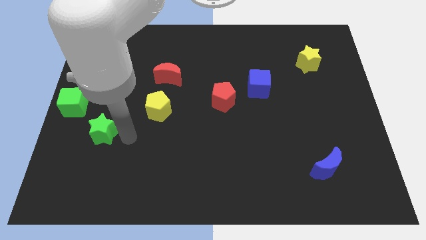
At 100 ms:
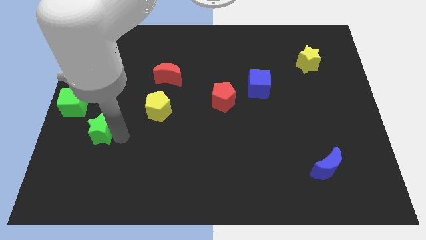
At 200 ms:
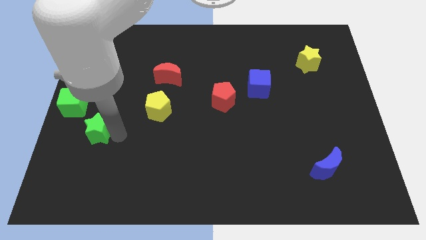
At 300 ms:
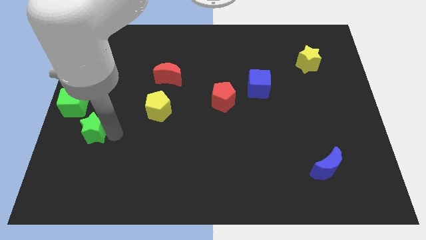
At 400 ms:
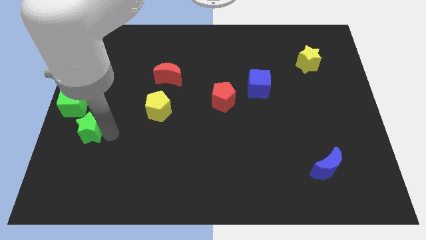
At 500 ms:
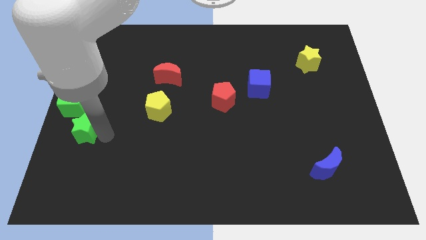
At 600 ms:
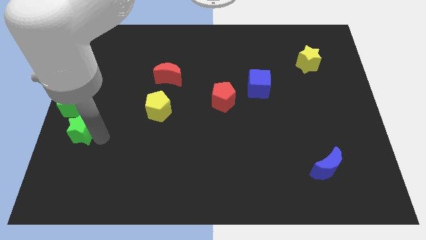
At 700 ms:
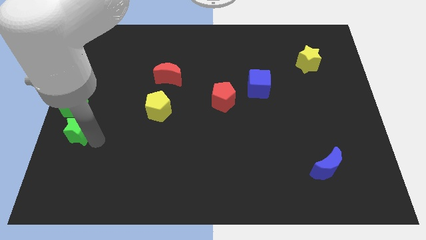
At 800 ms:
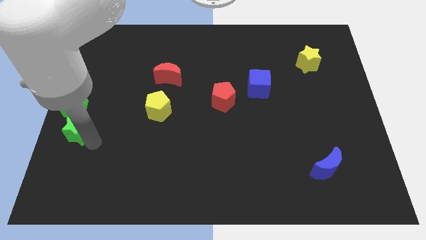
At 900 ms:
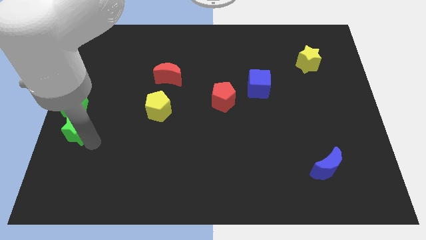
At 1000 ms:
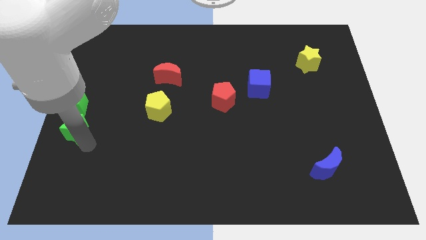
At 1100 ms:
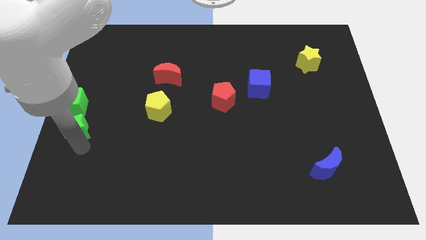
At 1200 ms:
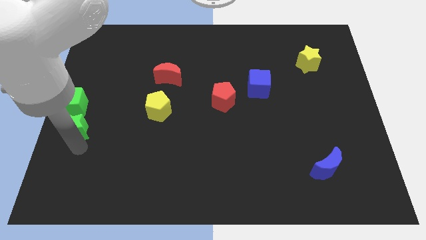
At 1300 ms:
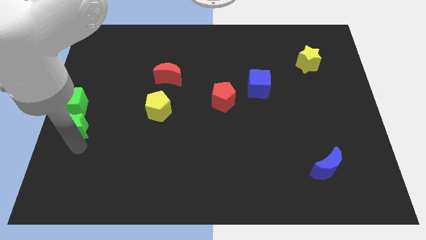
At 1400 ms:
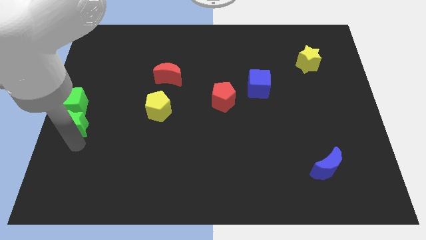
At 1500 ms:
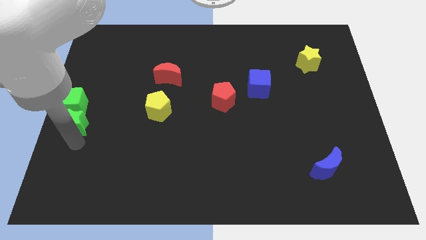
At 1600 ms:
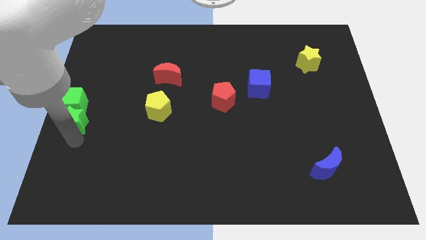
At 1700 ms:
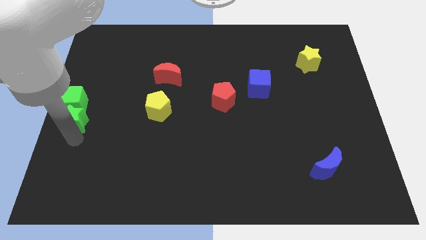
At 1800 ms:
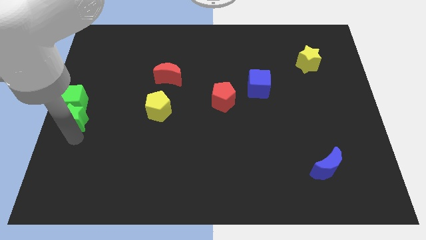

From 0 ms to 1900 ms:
move the green star into the green cube

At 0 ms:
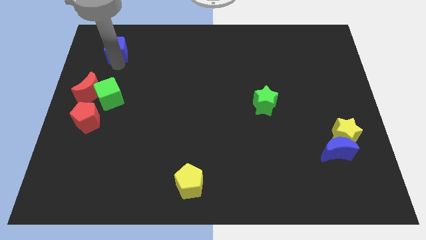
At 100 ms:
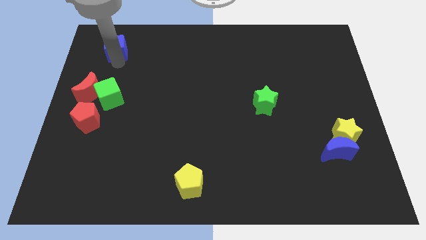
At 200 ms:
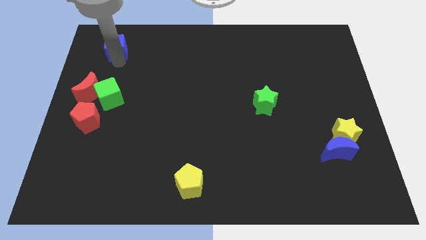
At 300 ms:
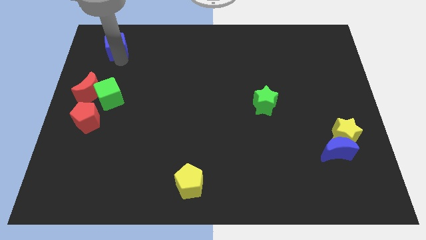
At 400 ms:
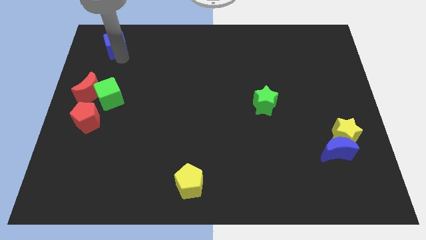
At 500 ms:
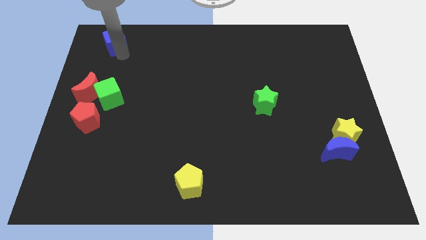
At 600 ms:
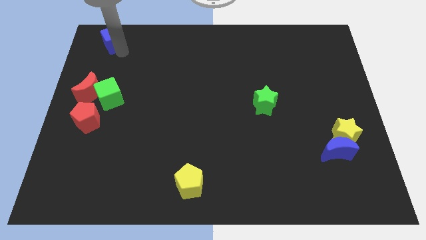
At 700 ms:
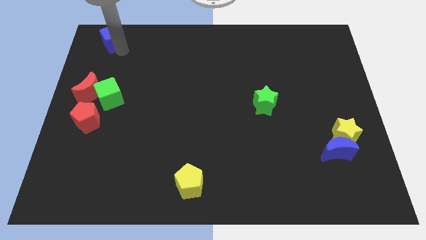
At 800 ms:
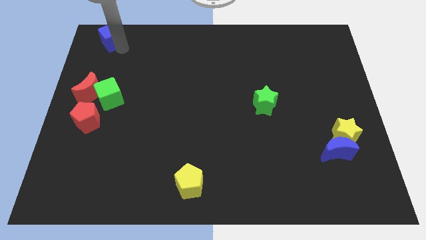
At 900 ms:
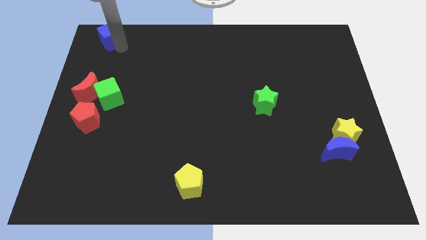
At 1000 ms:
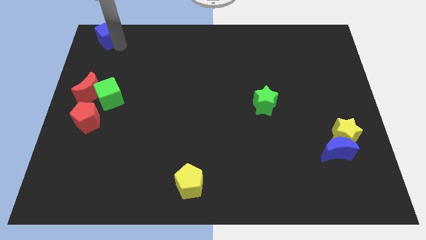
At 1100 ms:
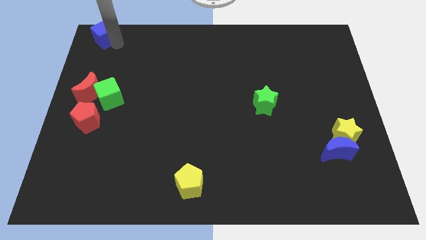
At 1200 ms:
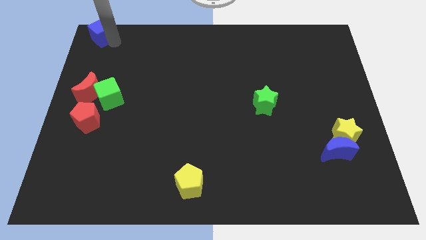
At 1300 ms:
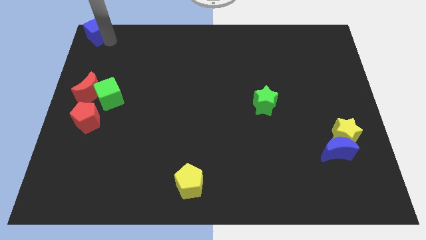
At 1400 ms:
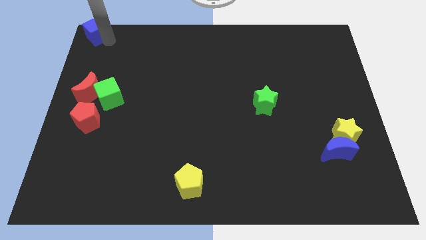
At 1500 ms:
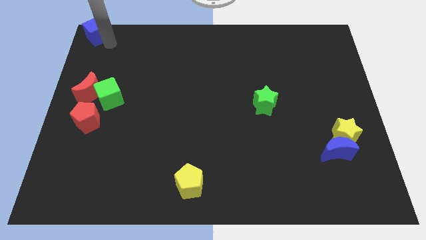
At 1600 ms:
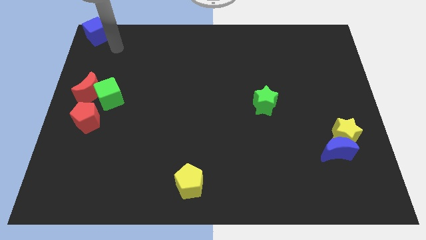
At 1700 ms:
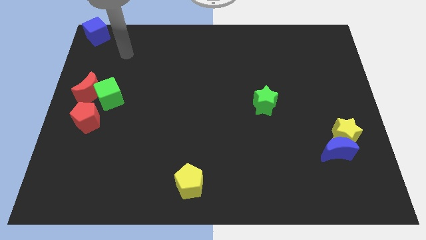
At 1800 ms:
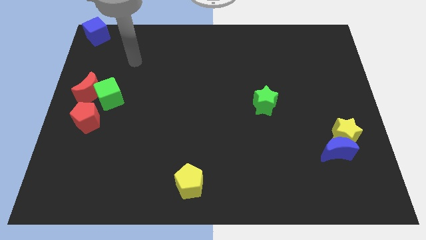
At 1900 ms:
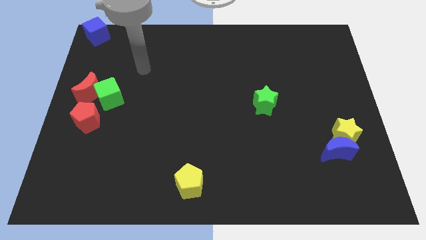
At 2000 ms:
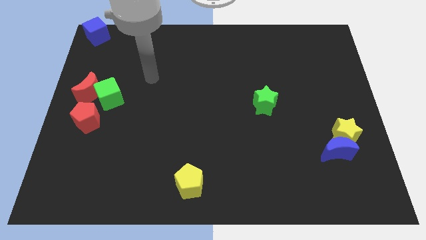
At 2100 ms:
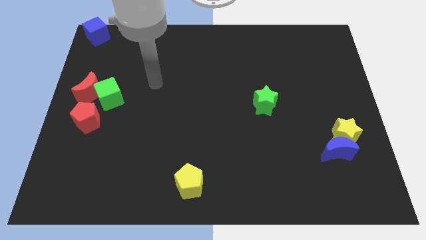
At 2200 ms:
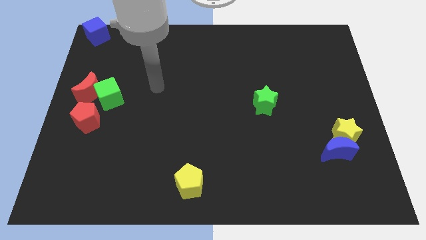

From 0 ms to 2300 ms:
push the blue cube towards the top left corner of the board

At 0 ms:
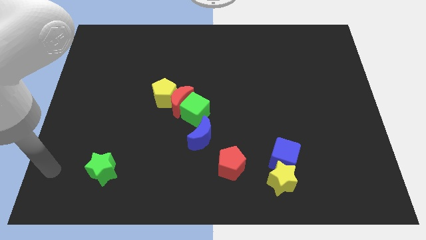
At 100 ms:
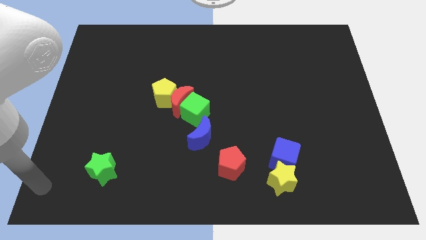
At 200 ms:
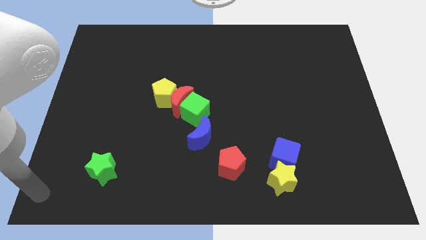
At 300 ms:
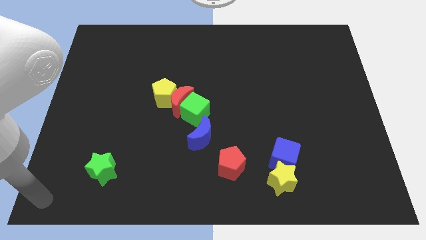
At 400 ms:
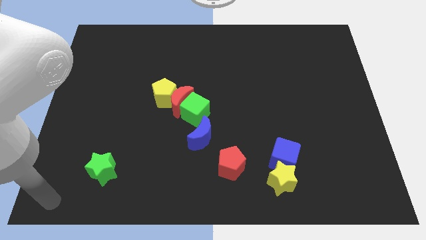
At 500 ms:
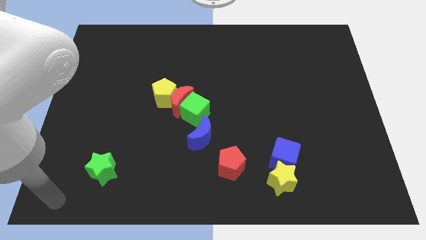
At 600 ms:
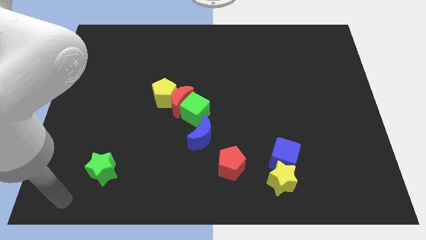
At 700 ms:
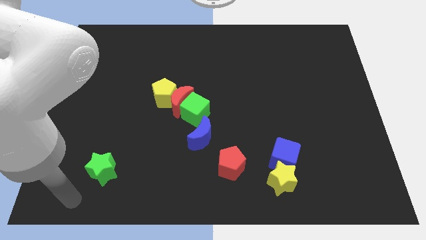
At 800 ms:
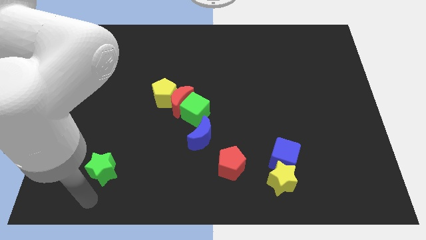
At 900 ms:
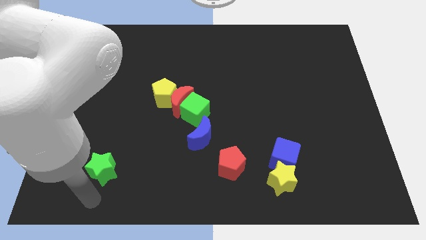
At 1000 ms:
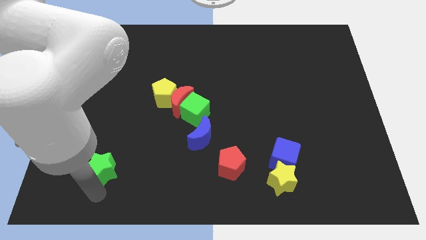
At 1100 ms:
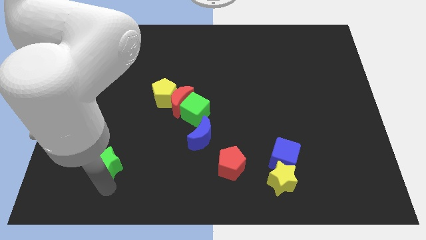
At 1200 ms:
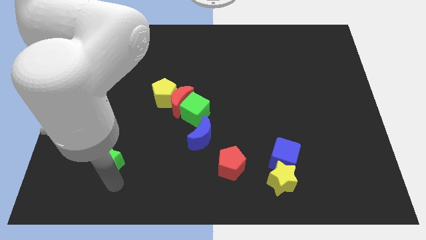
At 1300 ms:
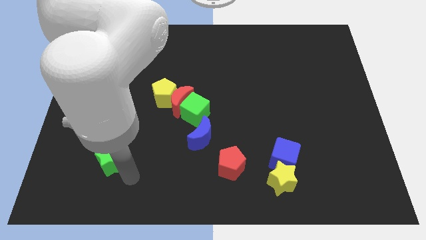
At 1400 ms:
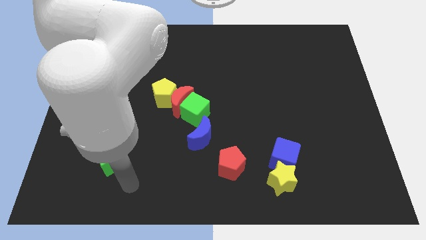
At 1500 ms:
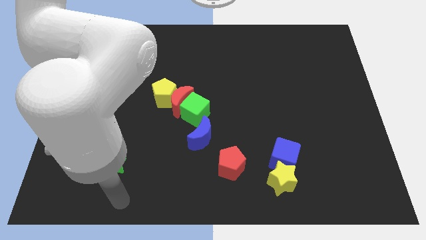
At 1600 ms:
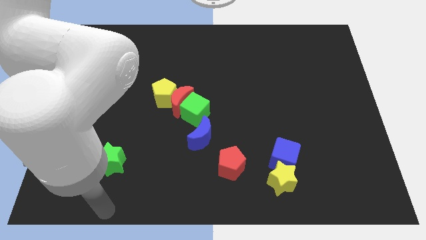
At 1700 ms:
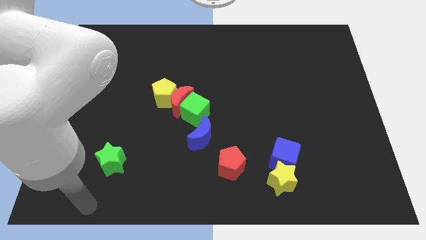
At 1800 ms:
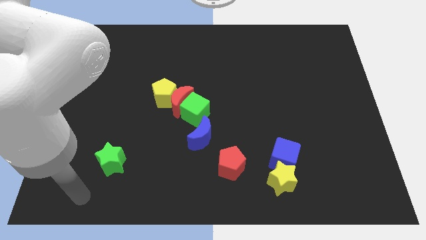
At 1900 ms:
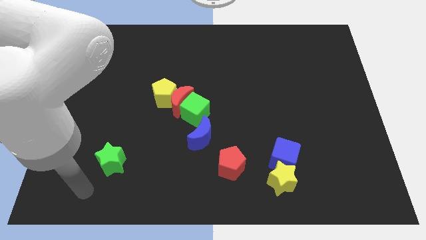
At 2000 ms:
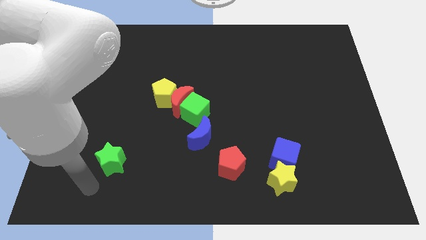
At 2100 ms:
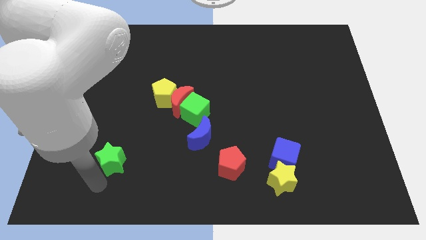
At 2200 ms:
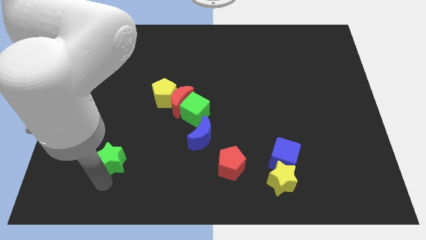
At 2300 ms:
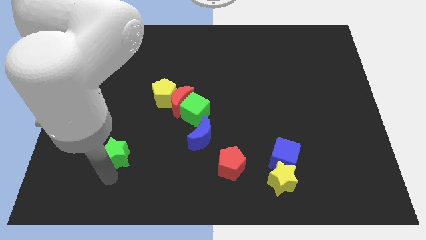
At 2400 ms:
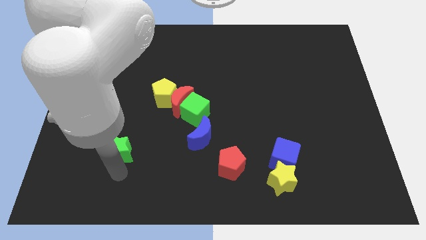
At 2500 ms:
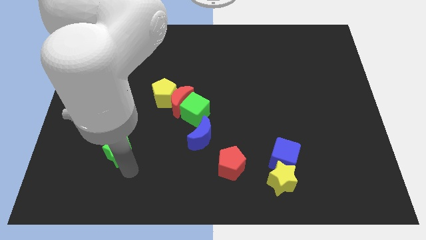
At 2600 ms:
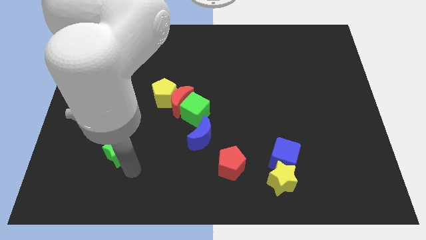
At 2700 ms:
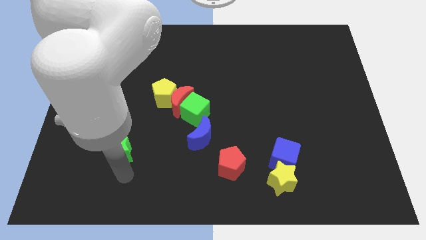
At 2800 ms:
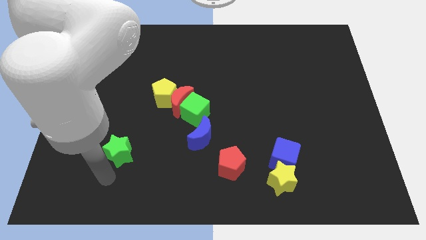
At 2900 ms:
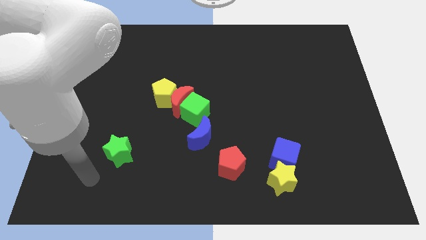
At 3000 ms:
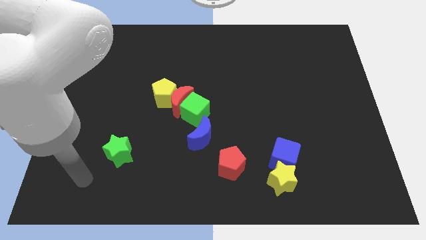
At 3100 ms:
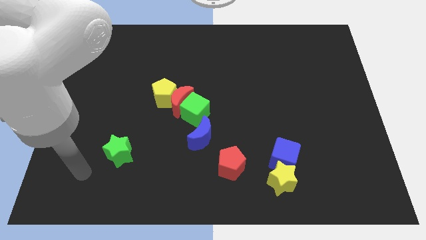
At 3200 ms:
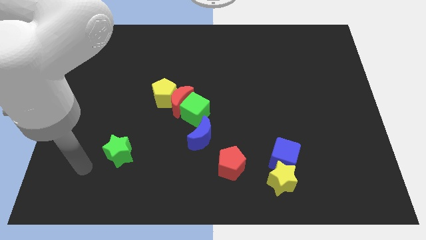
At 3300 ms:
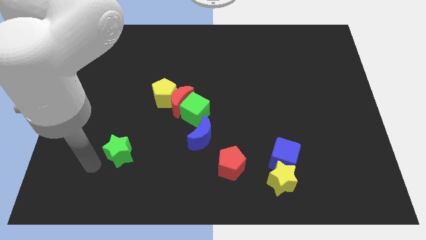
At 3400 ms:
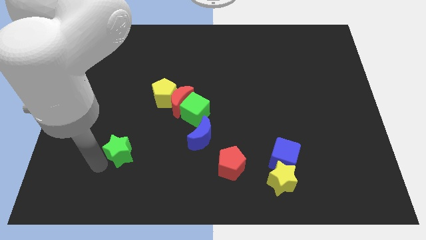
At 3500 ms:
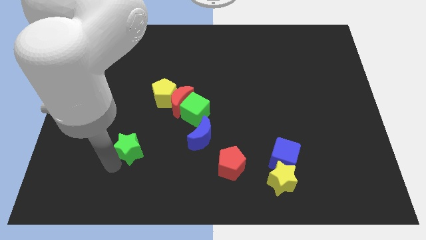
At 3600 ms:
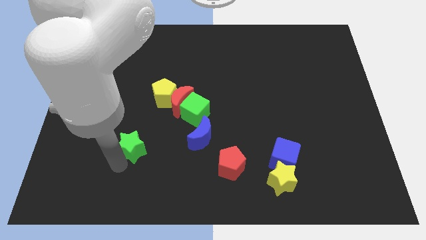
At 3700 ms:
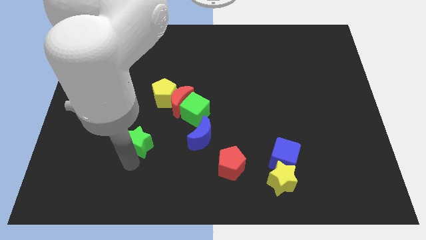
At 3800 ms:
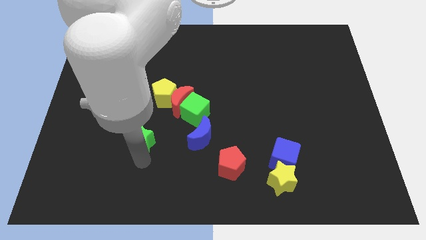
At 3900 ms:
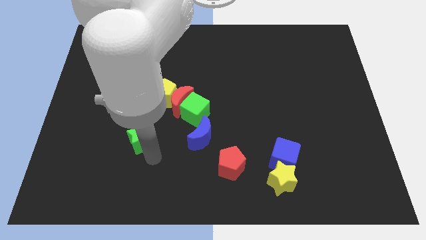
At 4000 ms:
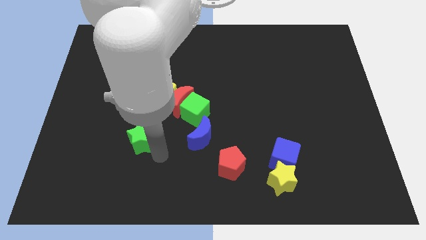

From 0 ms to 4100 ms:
move green star to the left of blue moon

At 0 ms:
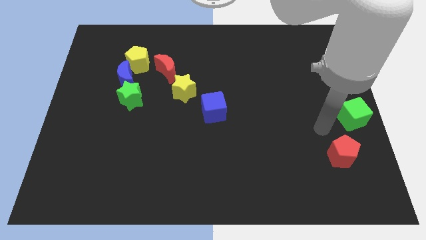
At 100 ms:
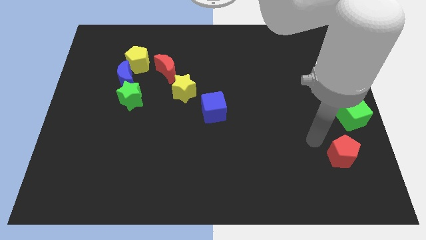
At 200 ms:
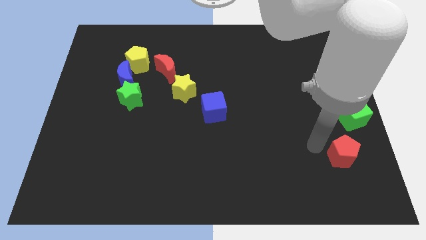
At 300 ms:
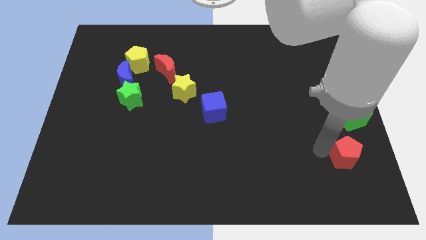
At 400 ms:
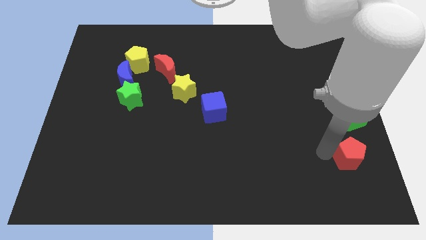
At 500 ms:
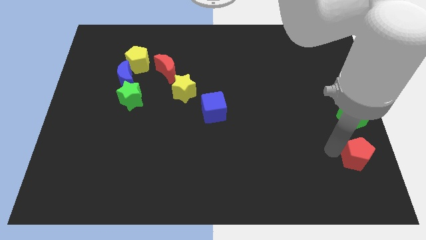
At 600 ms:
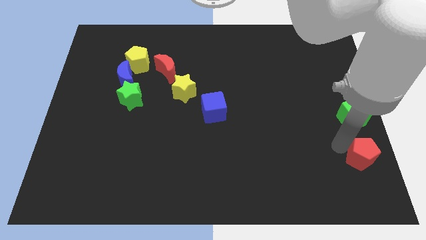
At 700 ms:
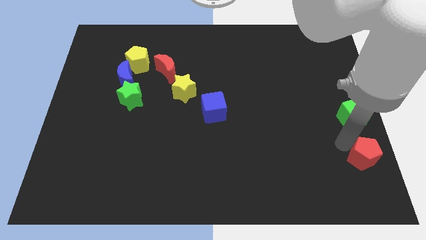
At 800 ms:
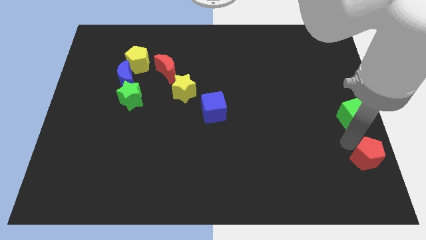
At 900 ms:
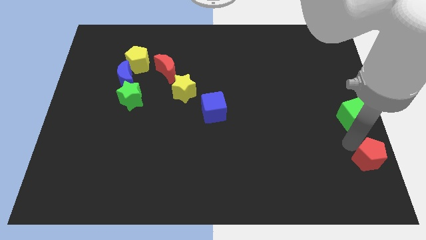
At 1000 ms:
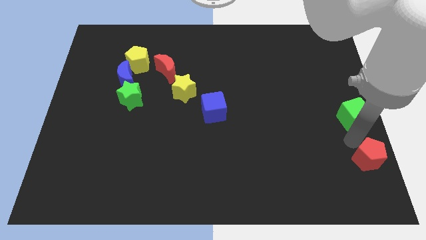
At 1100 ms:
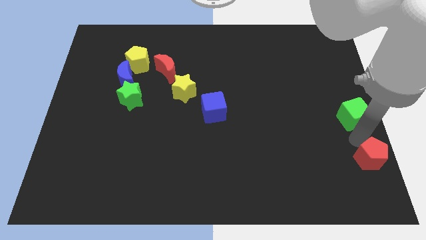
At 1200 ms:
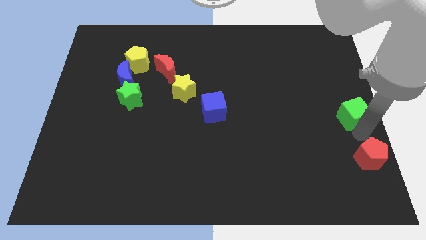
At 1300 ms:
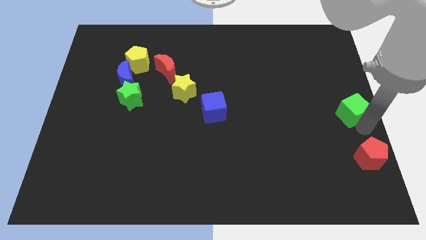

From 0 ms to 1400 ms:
move the red pentagon to the bottom of the green cube
